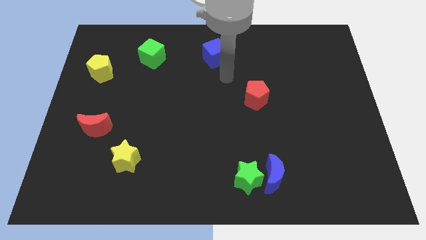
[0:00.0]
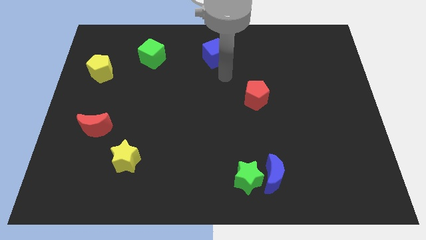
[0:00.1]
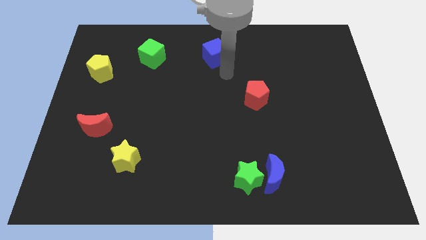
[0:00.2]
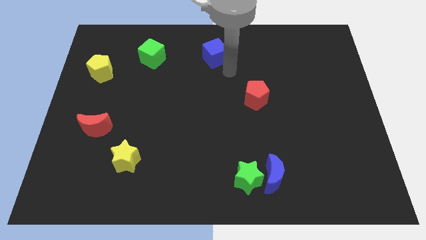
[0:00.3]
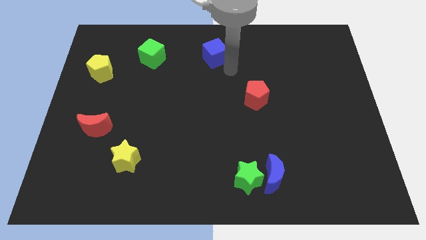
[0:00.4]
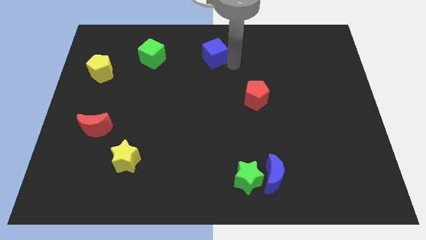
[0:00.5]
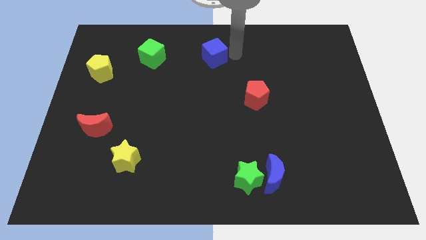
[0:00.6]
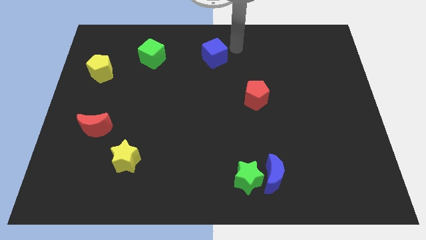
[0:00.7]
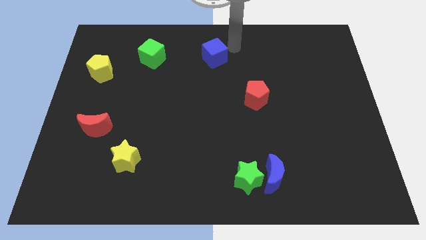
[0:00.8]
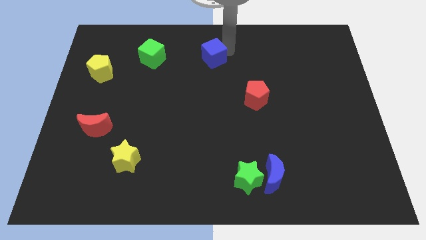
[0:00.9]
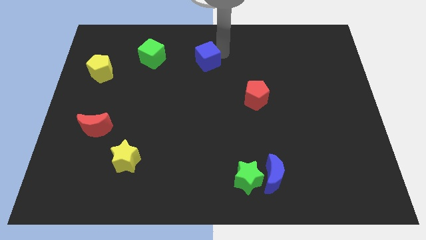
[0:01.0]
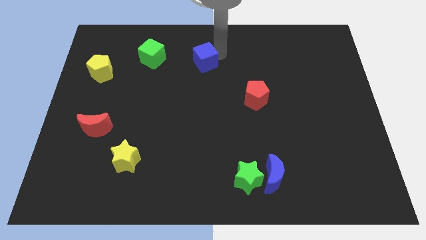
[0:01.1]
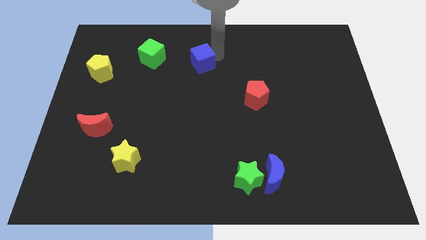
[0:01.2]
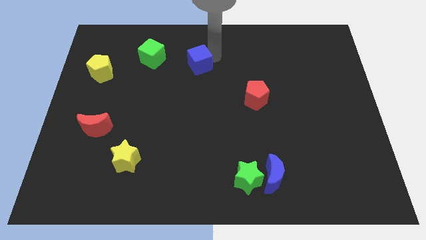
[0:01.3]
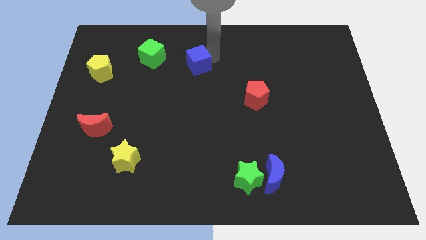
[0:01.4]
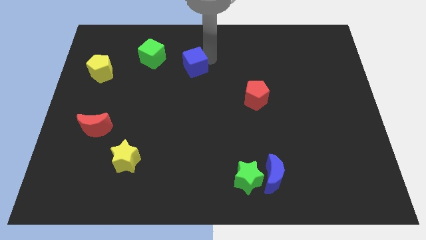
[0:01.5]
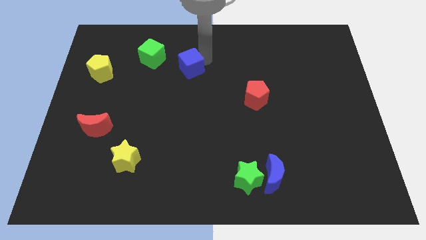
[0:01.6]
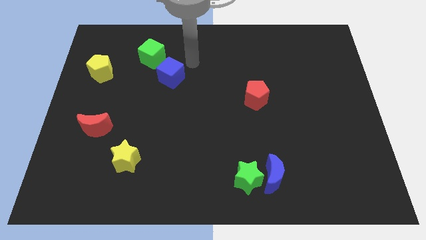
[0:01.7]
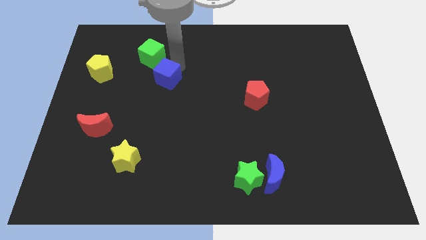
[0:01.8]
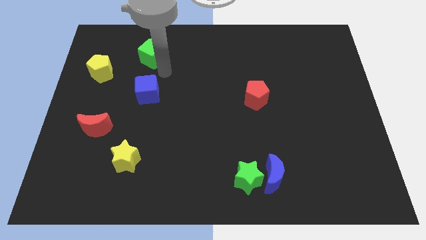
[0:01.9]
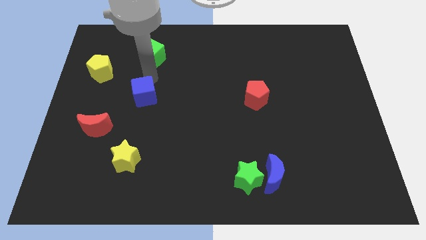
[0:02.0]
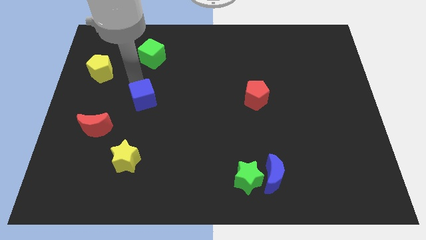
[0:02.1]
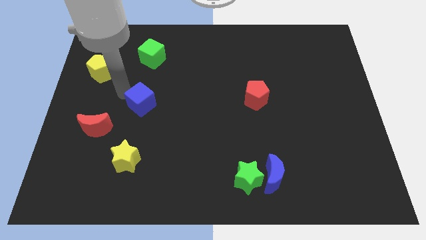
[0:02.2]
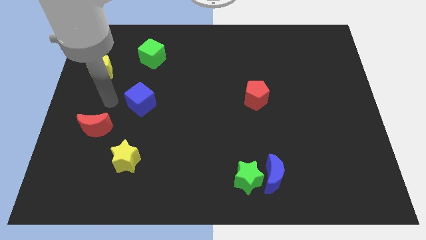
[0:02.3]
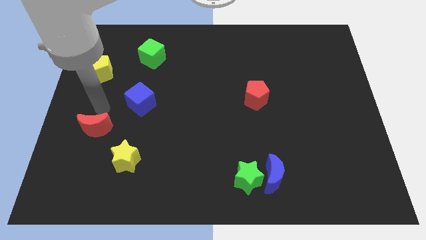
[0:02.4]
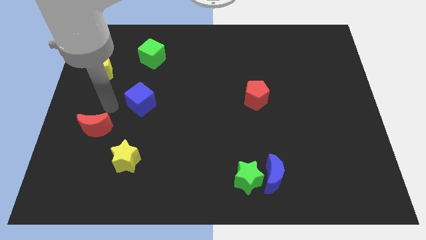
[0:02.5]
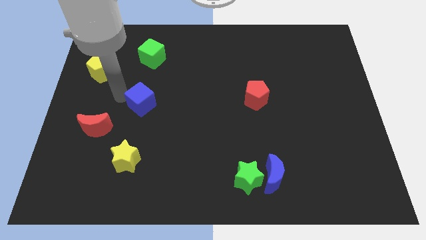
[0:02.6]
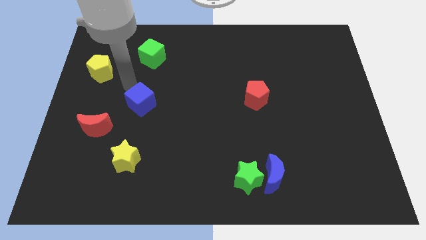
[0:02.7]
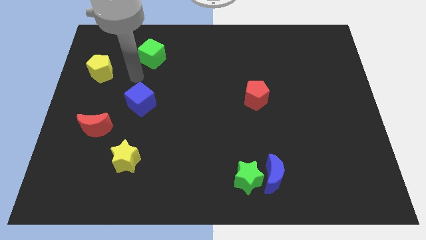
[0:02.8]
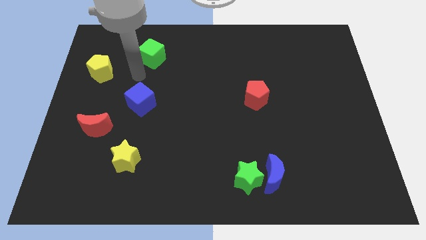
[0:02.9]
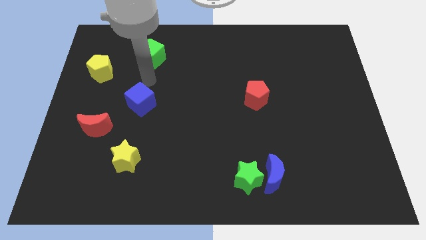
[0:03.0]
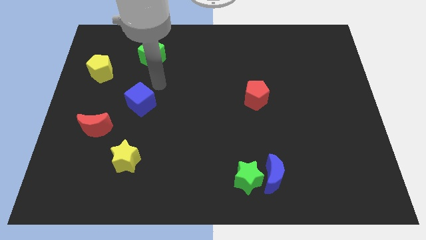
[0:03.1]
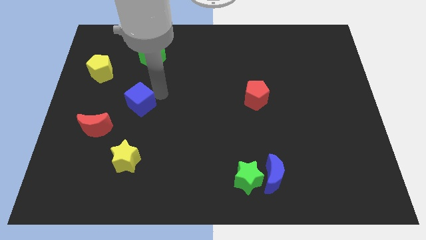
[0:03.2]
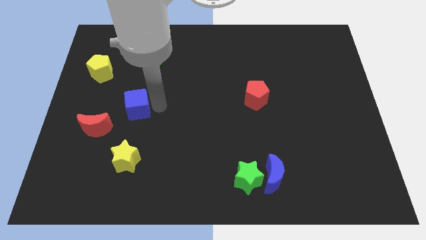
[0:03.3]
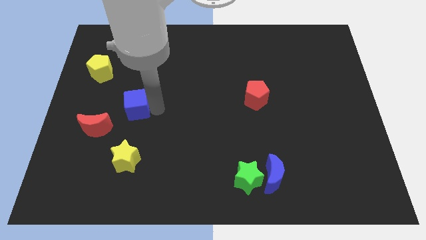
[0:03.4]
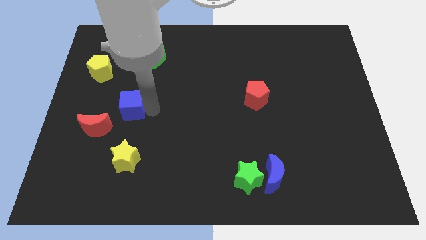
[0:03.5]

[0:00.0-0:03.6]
move the blue cube vertically above the yellow star

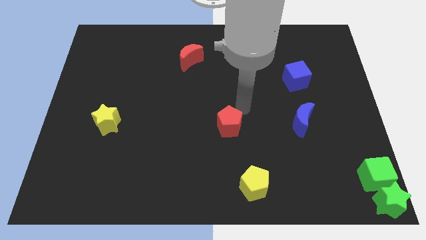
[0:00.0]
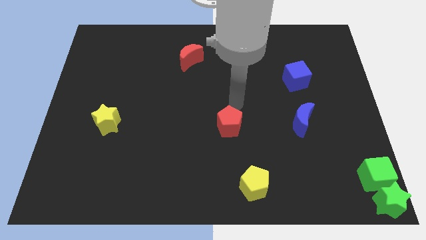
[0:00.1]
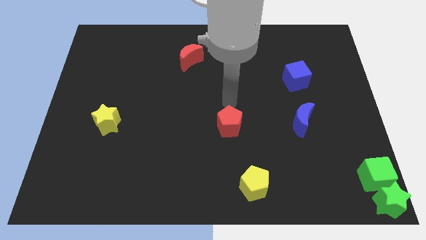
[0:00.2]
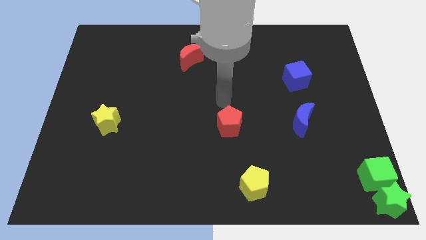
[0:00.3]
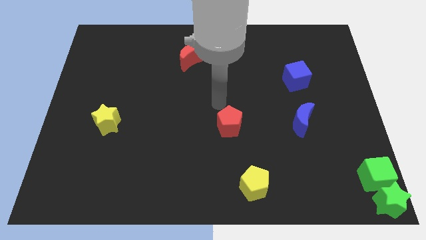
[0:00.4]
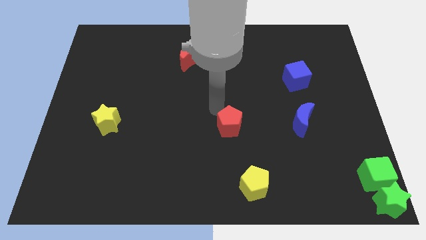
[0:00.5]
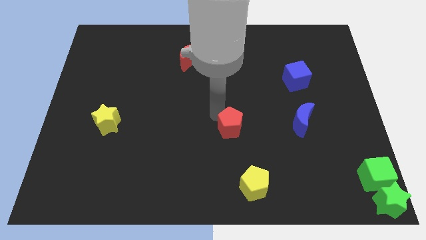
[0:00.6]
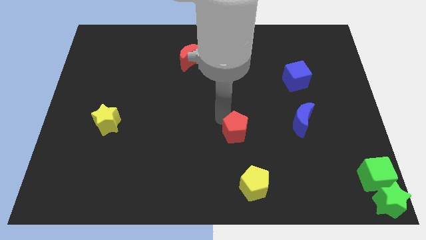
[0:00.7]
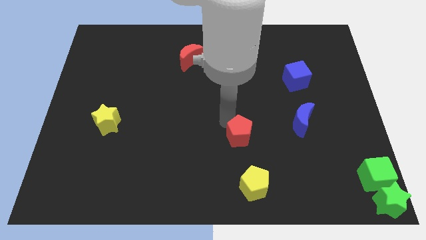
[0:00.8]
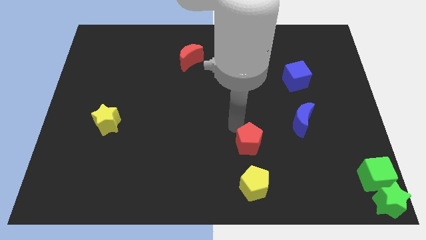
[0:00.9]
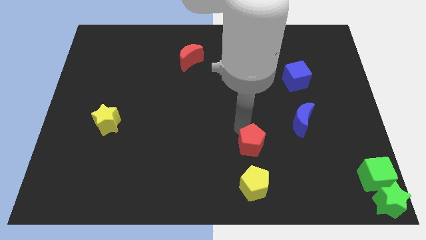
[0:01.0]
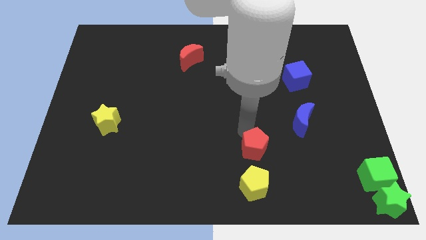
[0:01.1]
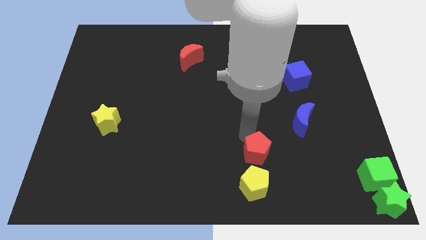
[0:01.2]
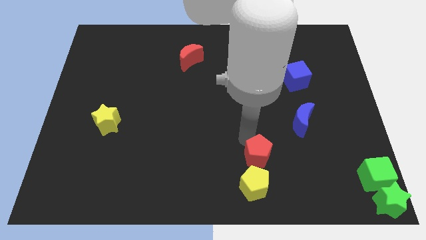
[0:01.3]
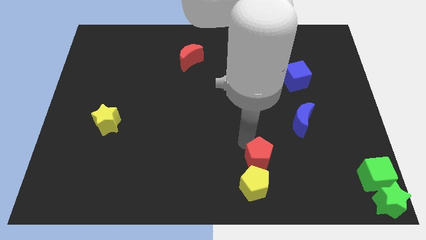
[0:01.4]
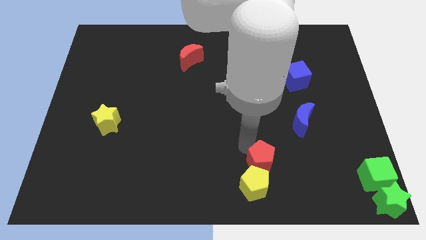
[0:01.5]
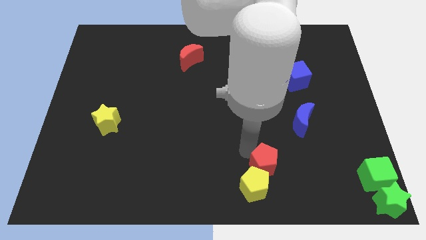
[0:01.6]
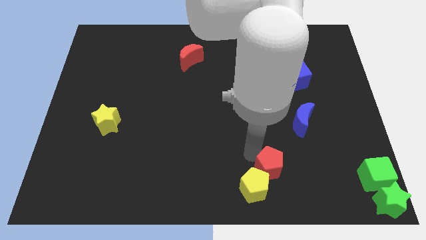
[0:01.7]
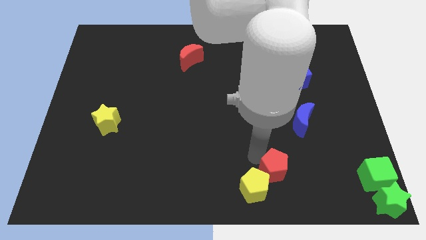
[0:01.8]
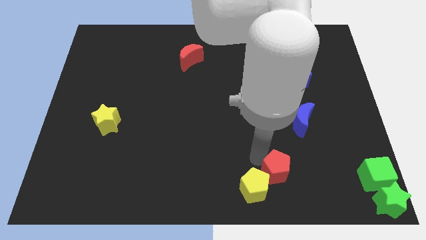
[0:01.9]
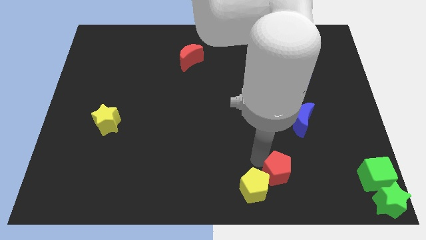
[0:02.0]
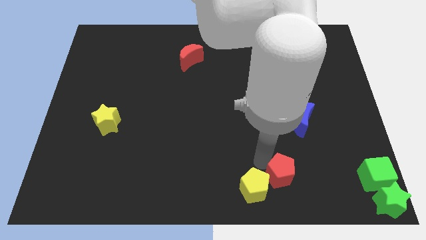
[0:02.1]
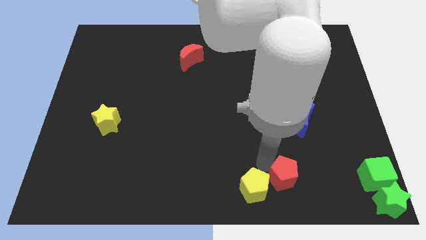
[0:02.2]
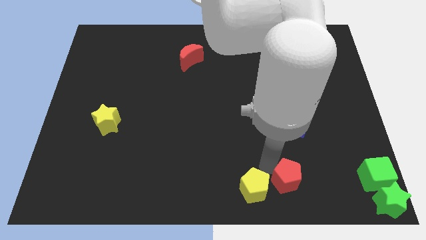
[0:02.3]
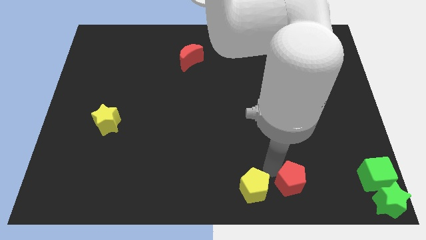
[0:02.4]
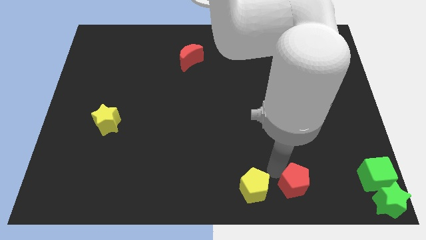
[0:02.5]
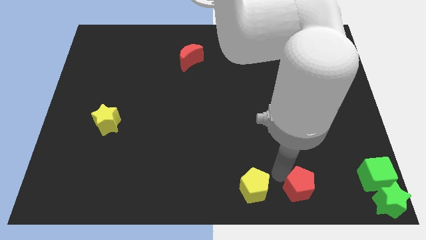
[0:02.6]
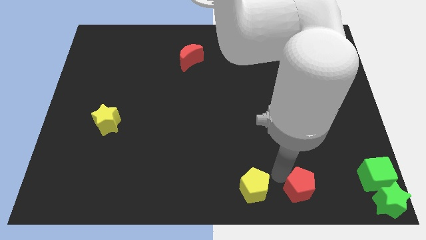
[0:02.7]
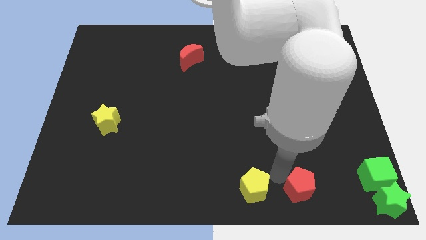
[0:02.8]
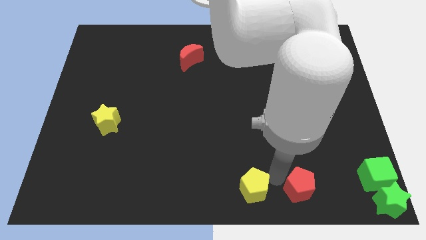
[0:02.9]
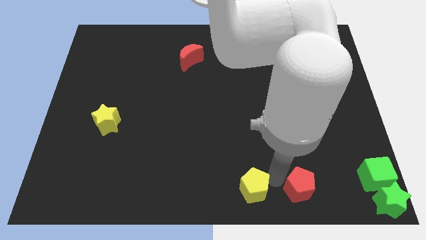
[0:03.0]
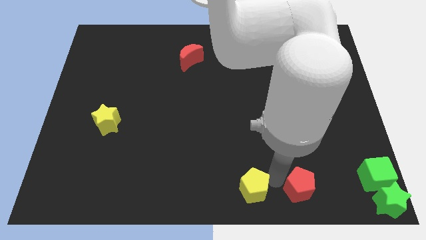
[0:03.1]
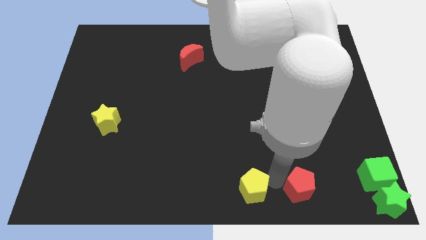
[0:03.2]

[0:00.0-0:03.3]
move the red pentagon to the right of the yellow pentagon

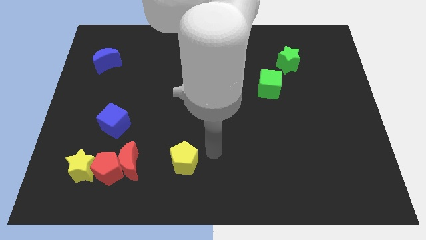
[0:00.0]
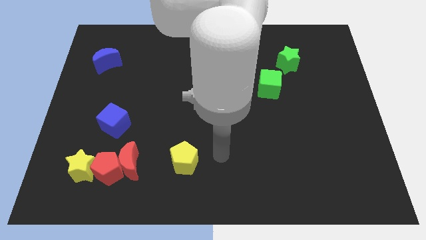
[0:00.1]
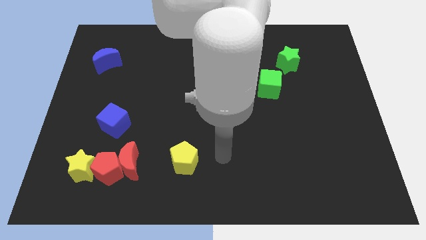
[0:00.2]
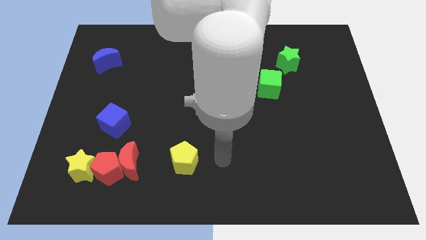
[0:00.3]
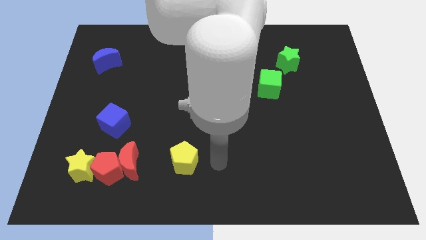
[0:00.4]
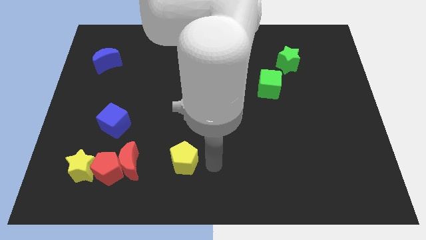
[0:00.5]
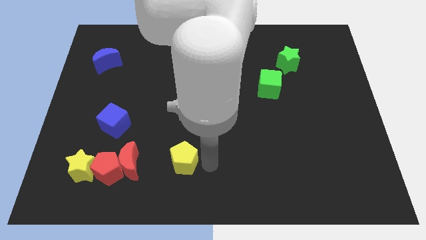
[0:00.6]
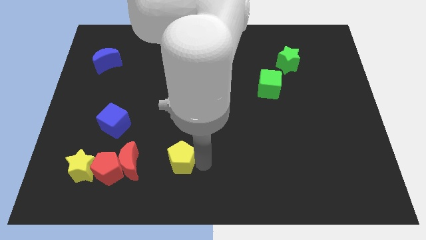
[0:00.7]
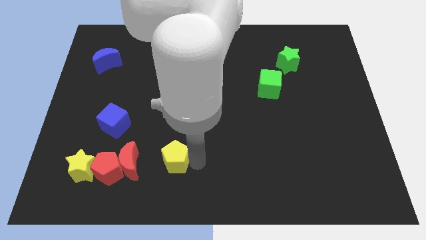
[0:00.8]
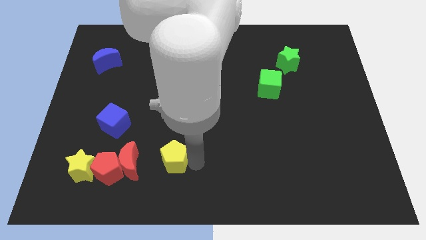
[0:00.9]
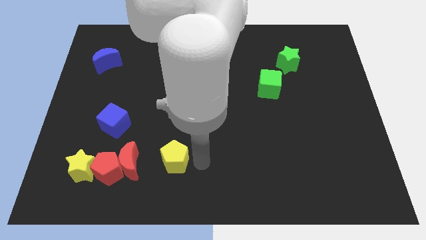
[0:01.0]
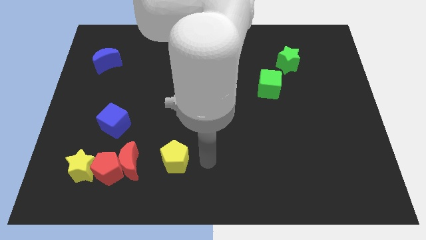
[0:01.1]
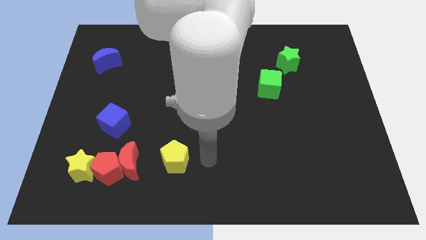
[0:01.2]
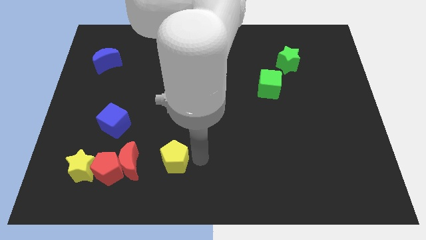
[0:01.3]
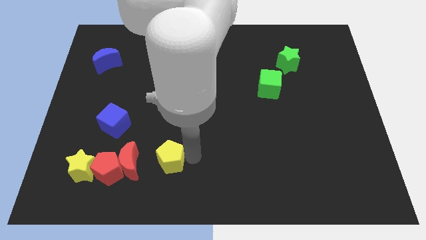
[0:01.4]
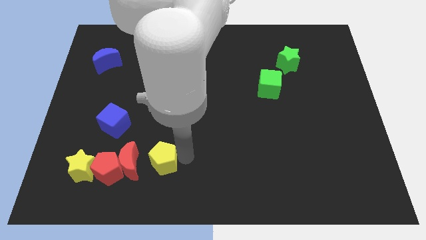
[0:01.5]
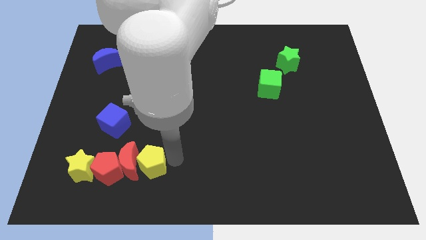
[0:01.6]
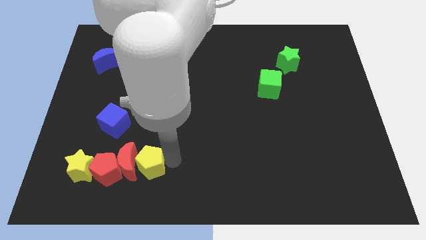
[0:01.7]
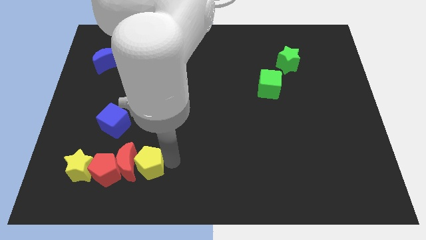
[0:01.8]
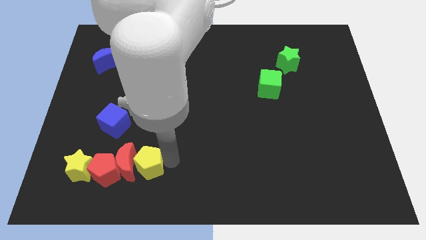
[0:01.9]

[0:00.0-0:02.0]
move the yellow pentagon into the red crescent
